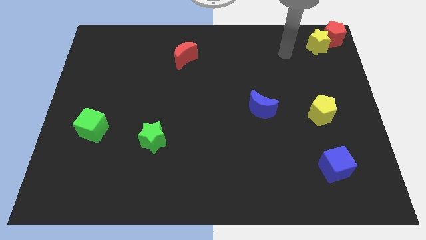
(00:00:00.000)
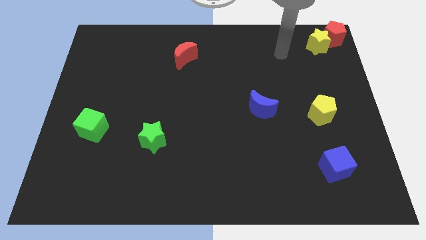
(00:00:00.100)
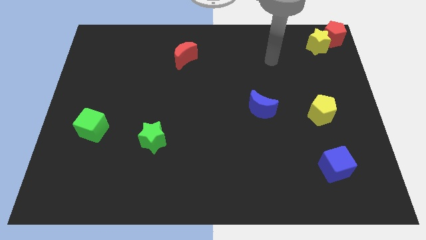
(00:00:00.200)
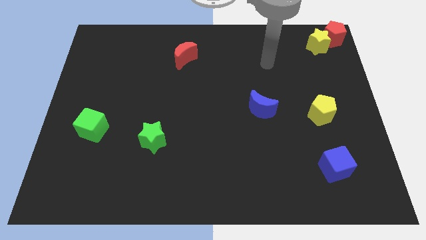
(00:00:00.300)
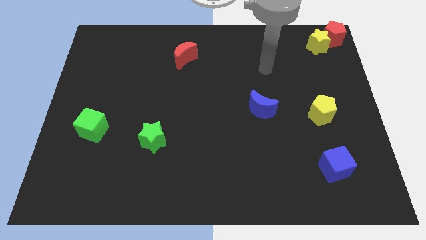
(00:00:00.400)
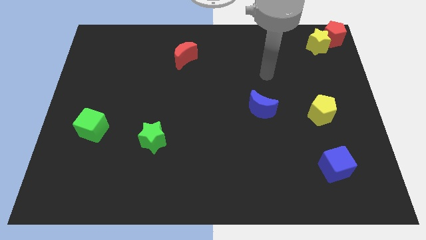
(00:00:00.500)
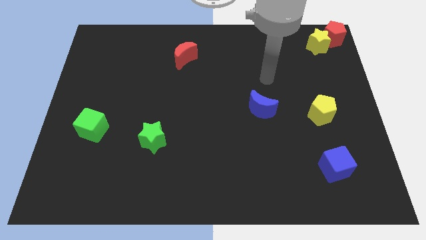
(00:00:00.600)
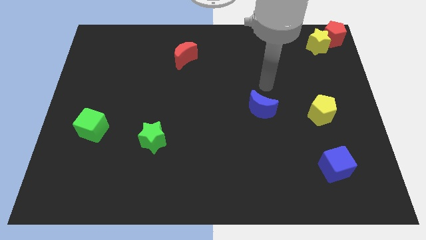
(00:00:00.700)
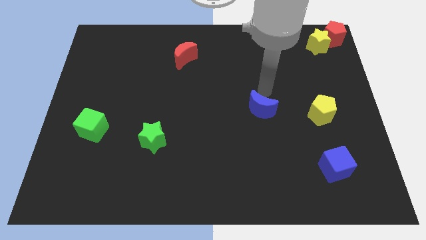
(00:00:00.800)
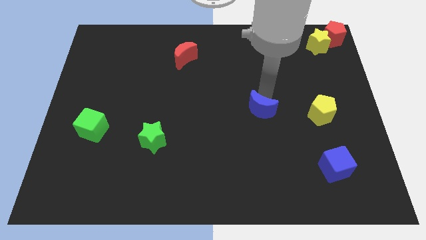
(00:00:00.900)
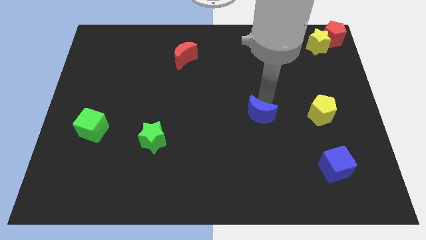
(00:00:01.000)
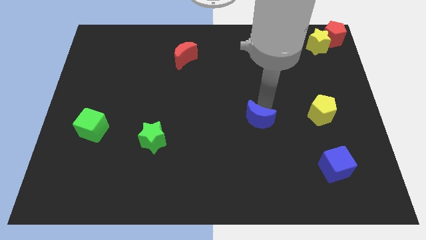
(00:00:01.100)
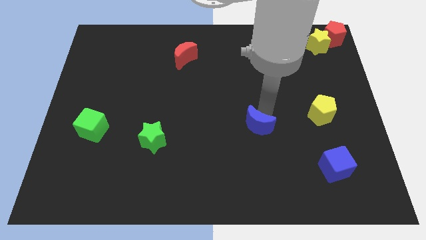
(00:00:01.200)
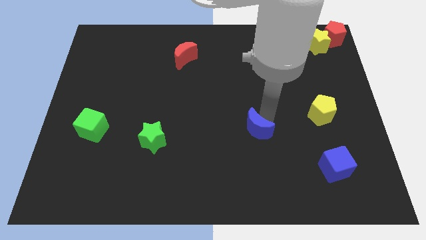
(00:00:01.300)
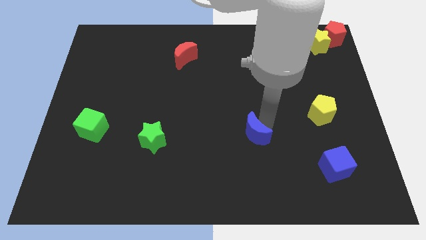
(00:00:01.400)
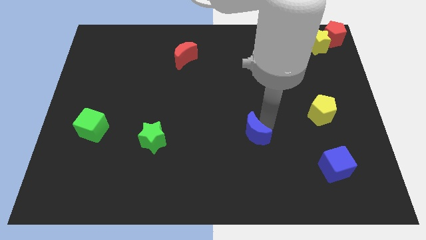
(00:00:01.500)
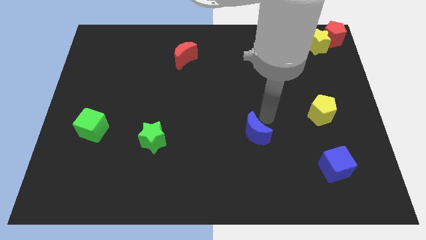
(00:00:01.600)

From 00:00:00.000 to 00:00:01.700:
push the blue crescent towards the bottom

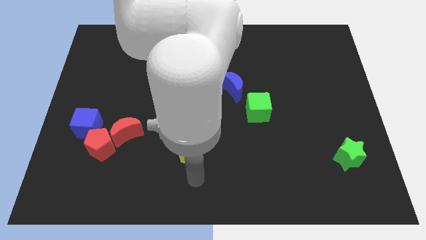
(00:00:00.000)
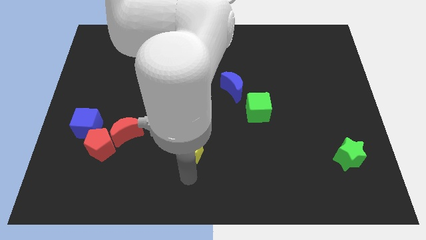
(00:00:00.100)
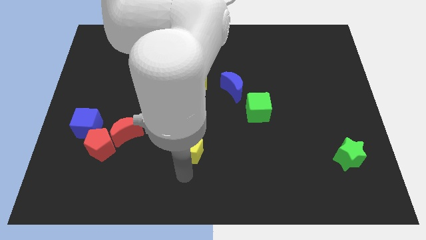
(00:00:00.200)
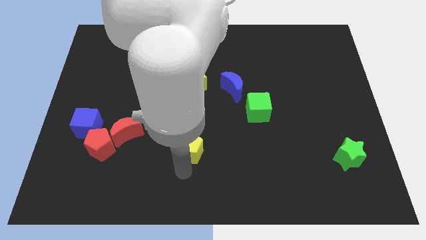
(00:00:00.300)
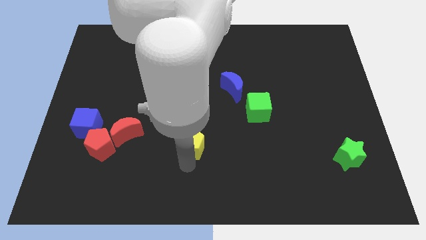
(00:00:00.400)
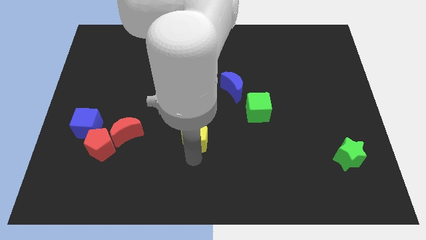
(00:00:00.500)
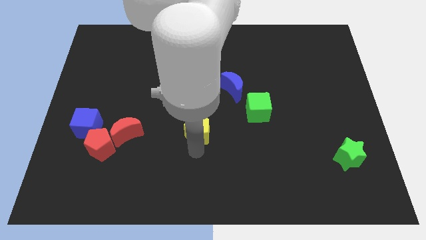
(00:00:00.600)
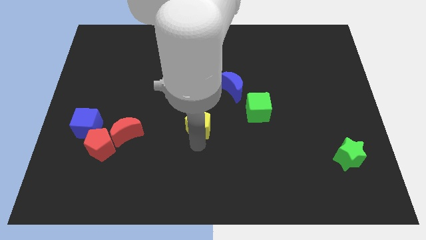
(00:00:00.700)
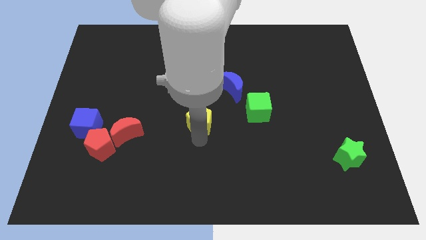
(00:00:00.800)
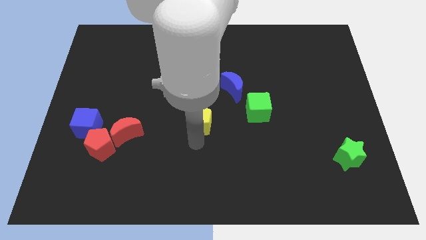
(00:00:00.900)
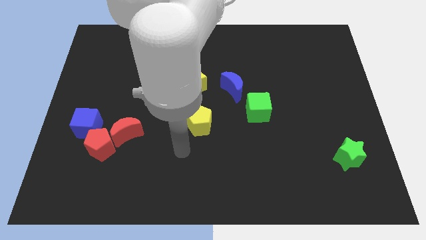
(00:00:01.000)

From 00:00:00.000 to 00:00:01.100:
push the yellow pentagon closer to the yellow star

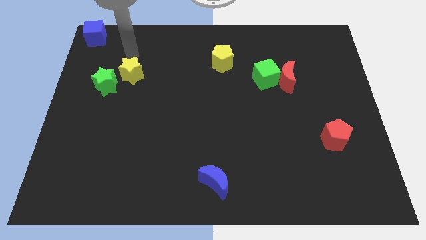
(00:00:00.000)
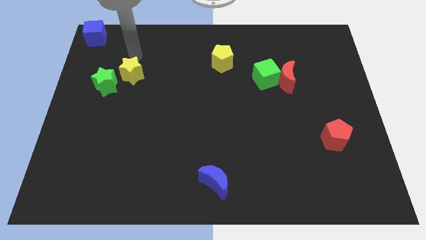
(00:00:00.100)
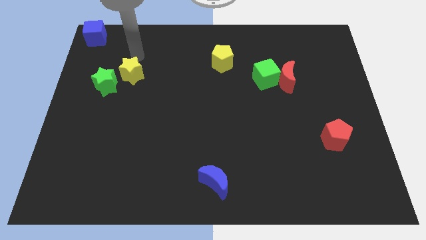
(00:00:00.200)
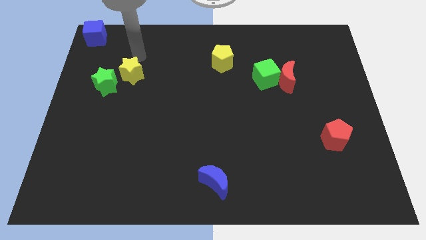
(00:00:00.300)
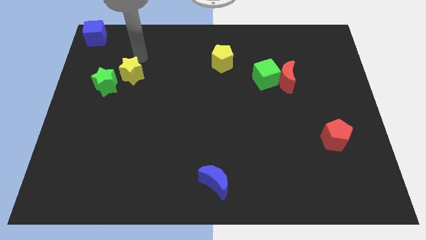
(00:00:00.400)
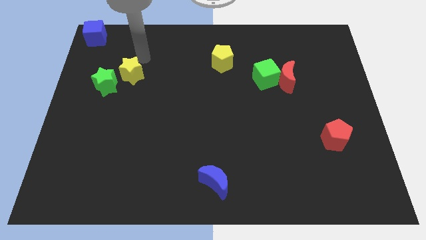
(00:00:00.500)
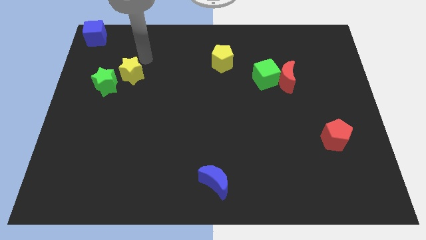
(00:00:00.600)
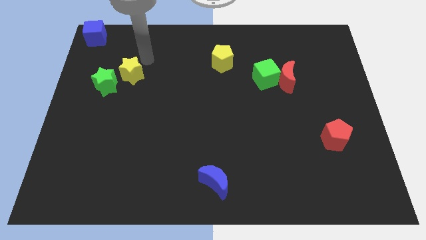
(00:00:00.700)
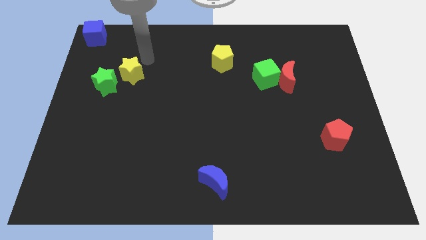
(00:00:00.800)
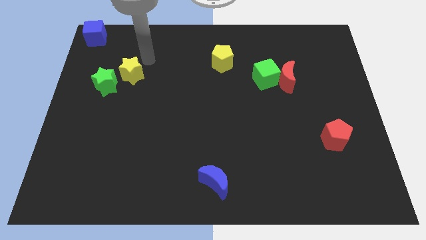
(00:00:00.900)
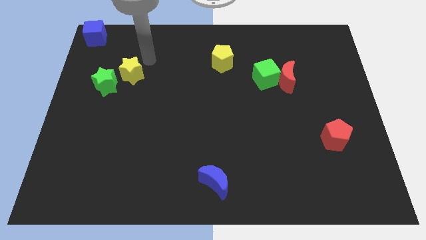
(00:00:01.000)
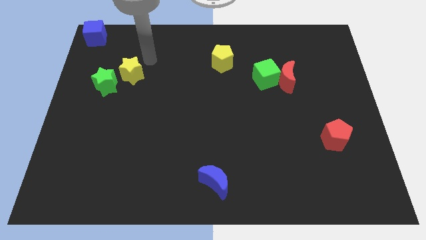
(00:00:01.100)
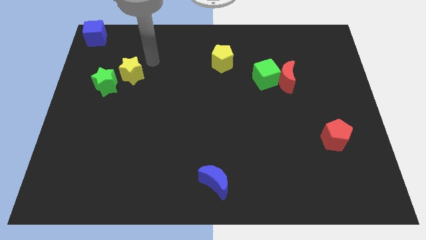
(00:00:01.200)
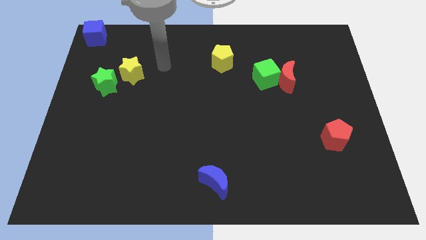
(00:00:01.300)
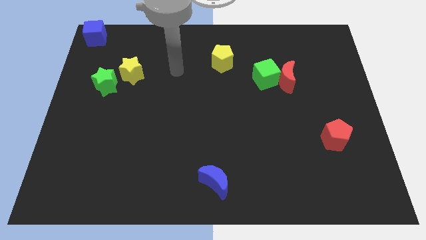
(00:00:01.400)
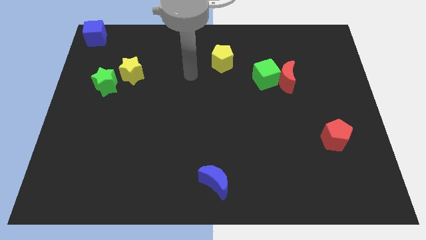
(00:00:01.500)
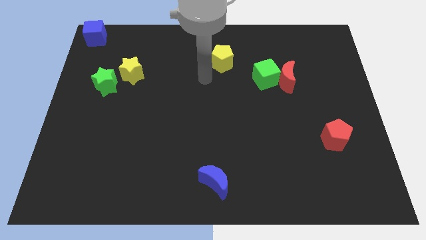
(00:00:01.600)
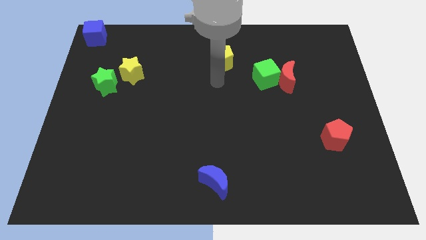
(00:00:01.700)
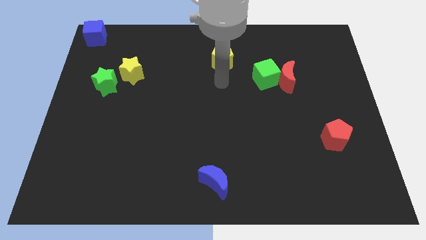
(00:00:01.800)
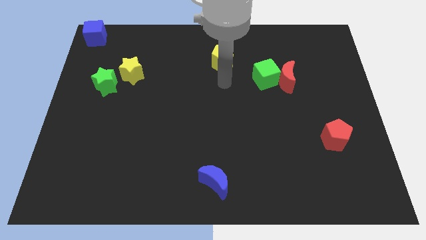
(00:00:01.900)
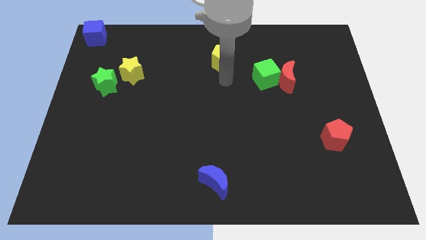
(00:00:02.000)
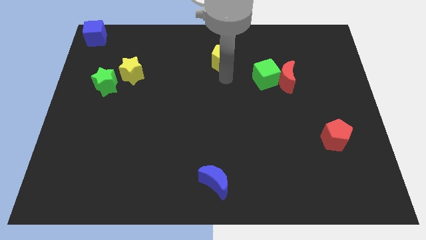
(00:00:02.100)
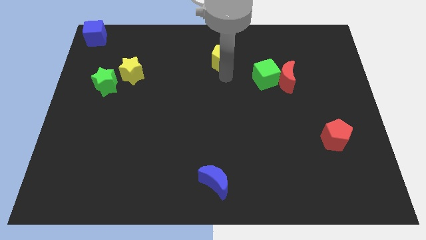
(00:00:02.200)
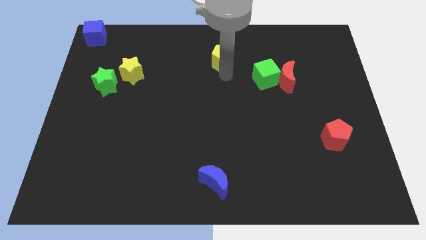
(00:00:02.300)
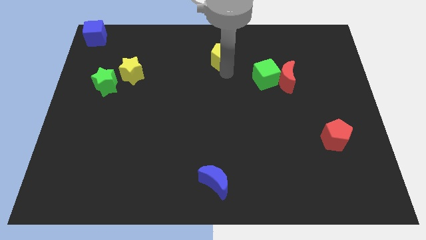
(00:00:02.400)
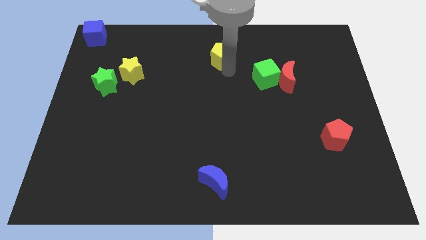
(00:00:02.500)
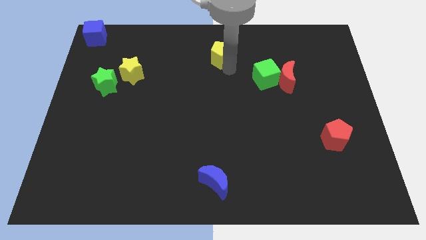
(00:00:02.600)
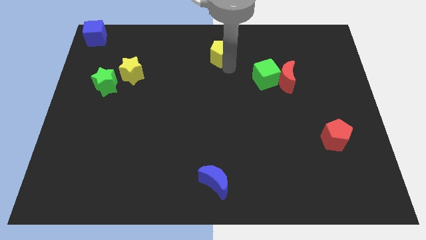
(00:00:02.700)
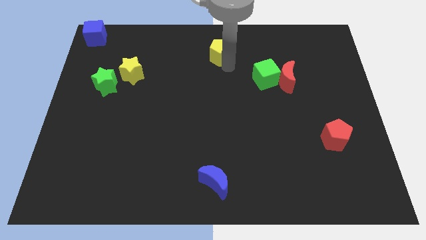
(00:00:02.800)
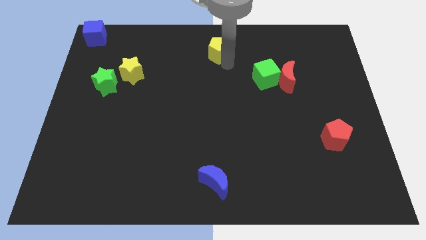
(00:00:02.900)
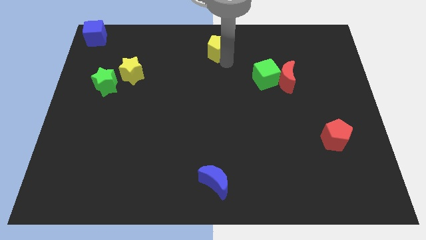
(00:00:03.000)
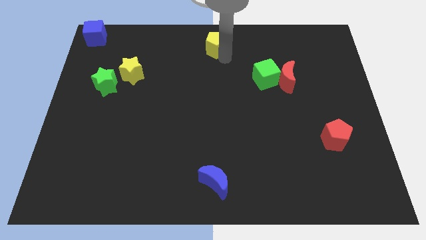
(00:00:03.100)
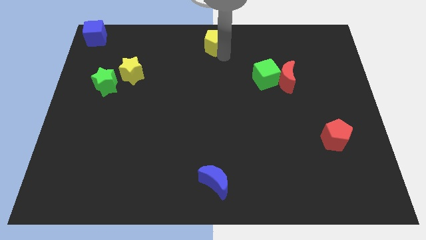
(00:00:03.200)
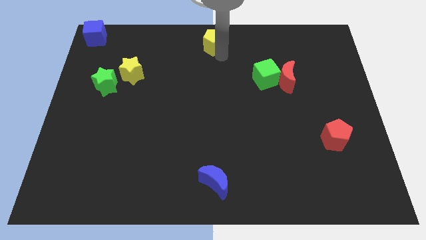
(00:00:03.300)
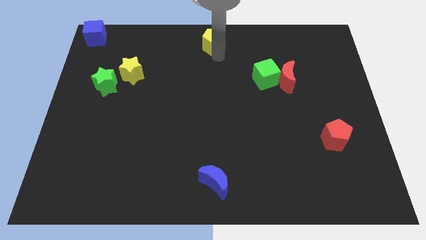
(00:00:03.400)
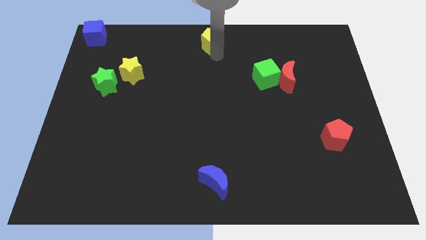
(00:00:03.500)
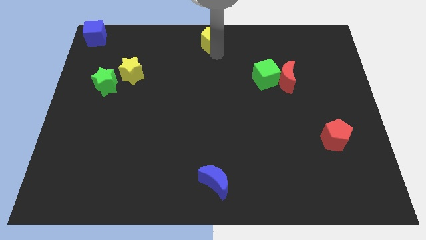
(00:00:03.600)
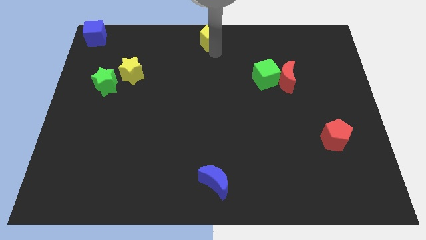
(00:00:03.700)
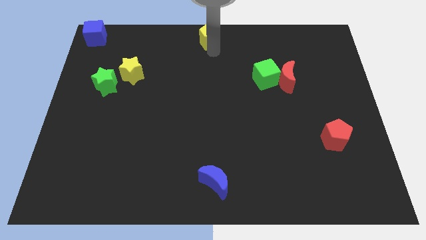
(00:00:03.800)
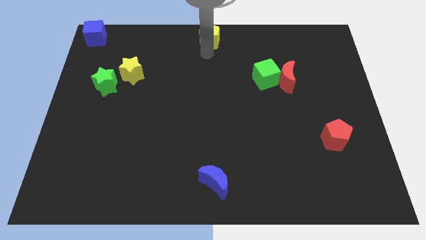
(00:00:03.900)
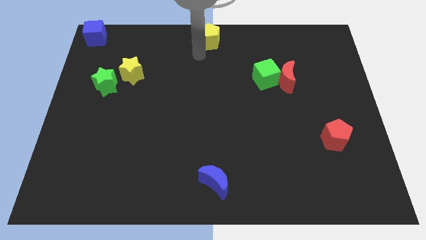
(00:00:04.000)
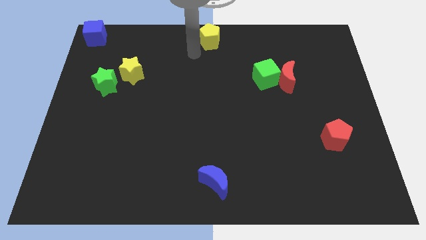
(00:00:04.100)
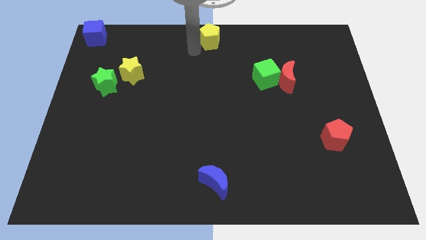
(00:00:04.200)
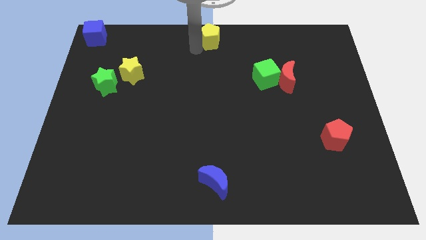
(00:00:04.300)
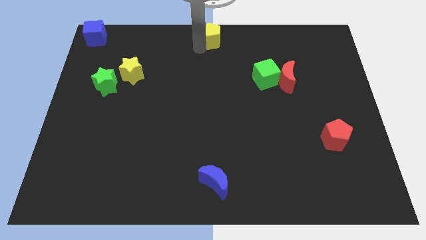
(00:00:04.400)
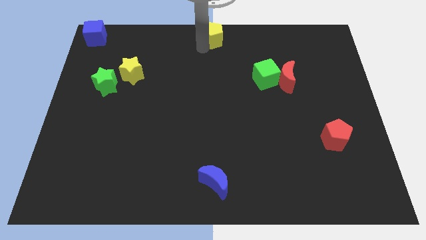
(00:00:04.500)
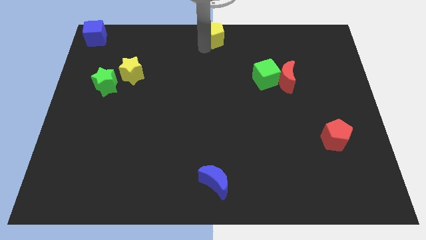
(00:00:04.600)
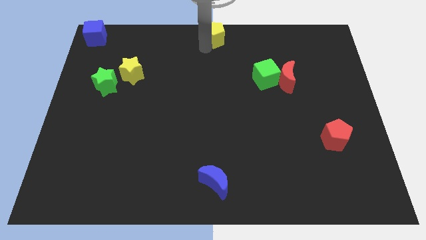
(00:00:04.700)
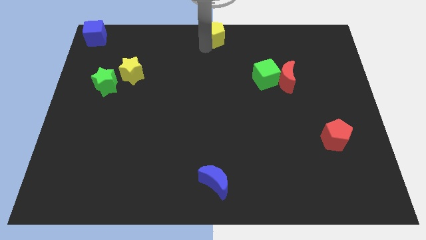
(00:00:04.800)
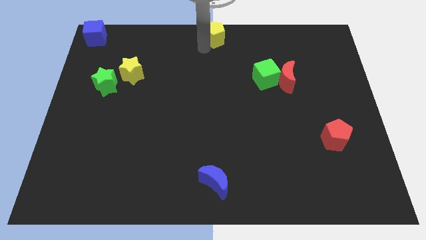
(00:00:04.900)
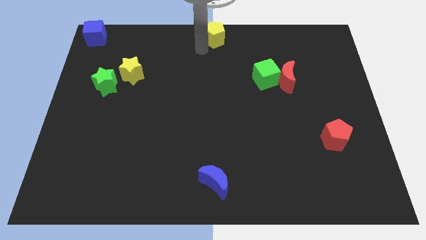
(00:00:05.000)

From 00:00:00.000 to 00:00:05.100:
move the yelow pentagon at the top center of the board

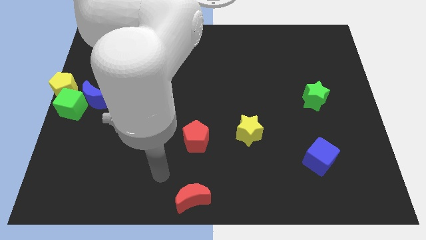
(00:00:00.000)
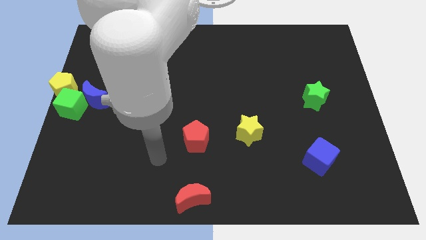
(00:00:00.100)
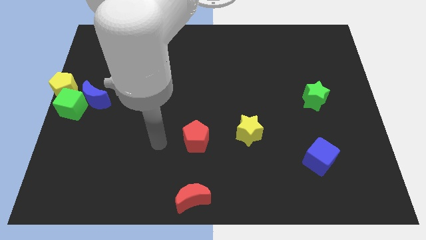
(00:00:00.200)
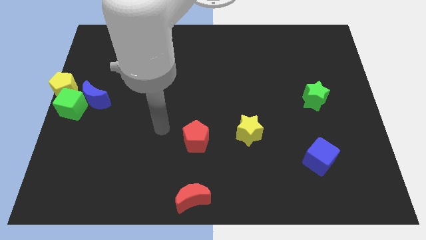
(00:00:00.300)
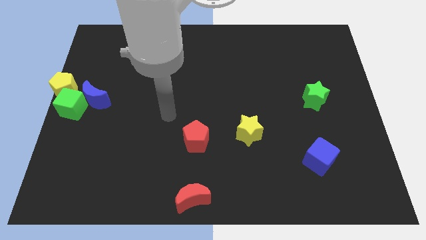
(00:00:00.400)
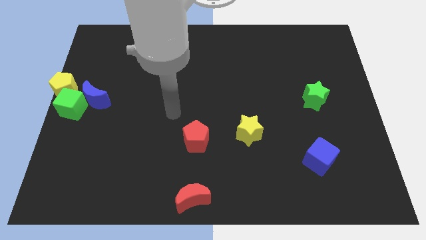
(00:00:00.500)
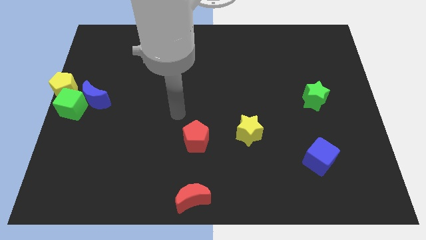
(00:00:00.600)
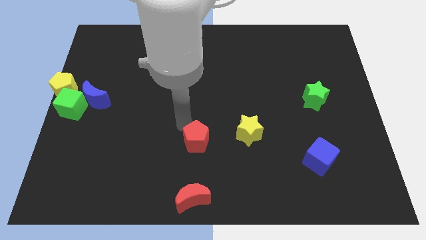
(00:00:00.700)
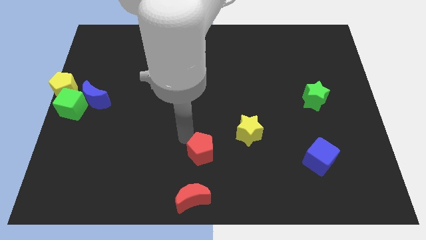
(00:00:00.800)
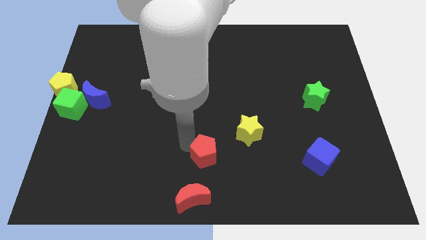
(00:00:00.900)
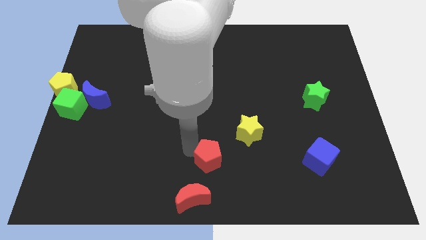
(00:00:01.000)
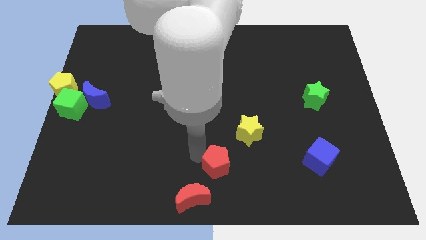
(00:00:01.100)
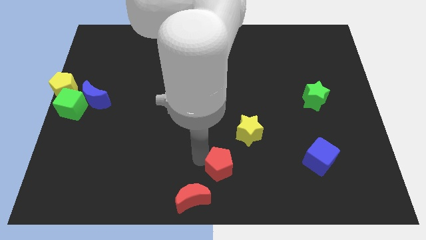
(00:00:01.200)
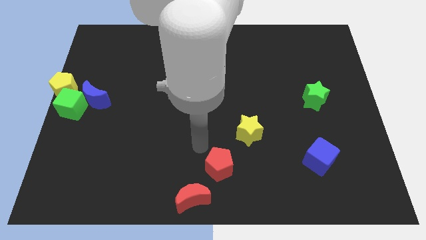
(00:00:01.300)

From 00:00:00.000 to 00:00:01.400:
push the red pentagon to the top right of the red crescent
